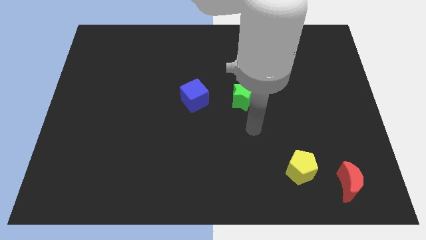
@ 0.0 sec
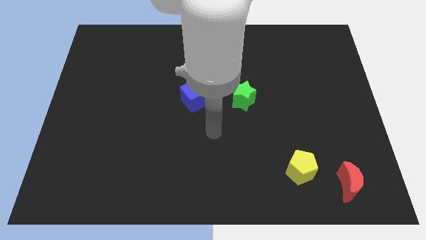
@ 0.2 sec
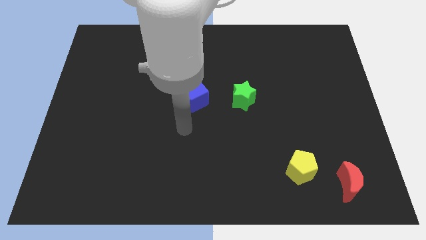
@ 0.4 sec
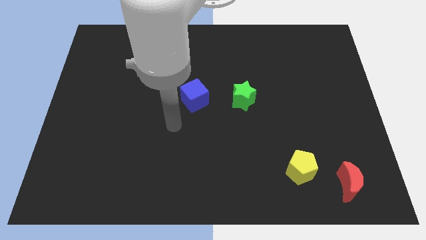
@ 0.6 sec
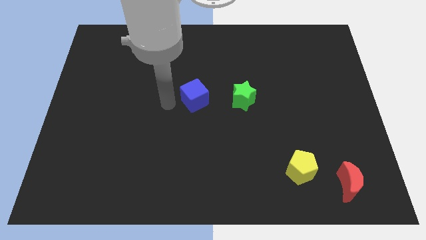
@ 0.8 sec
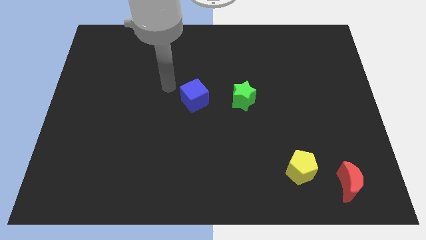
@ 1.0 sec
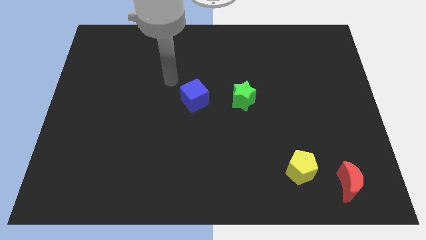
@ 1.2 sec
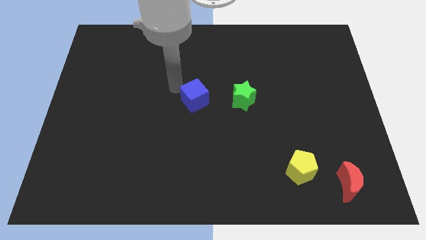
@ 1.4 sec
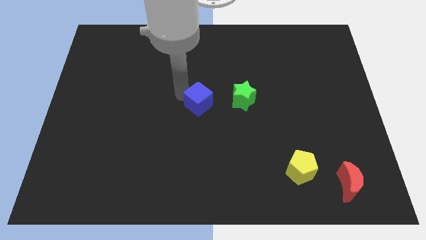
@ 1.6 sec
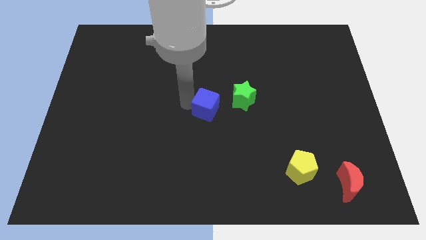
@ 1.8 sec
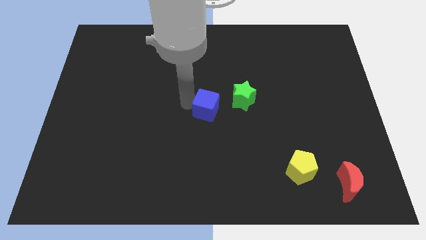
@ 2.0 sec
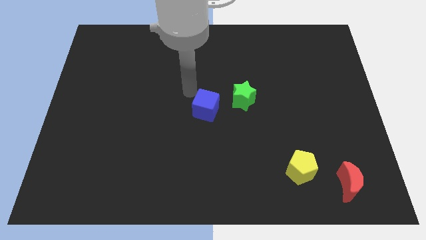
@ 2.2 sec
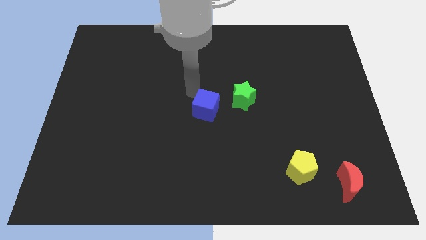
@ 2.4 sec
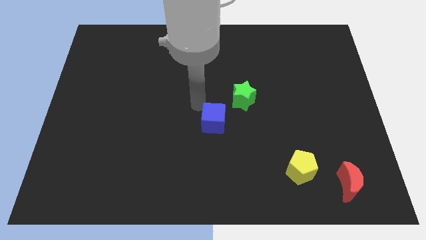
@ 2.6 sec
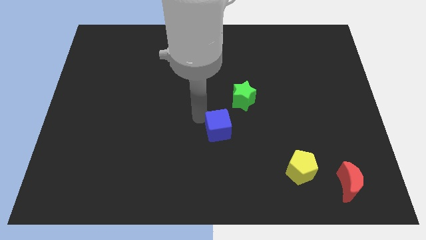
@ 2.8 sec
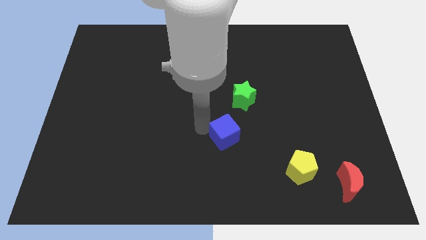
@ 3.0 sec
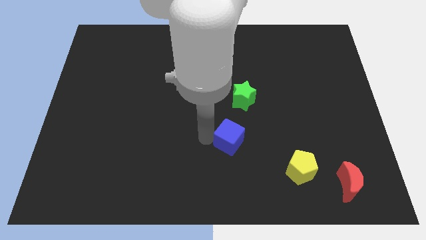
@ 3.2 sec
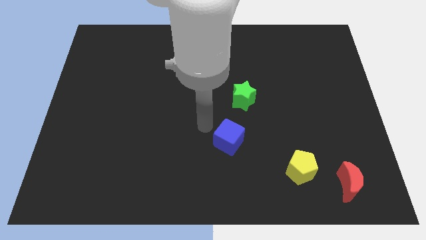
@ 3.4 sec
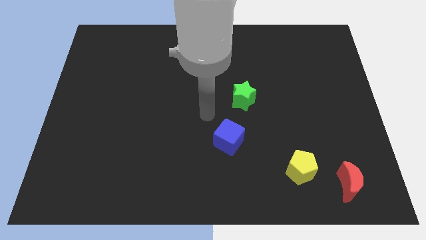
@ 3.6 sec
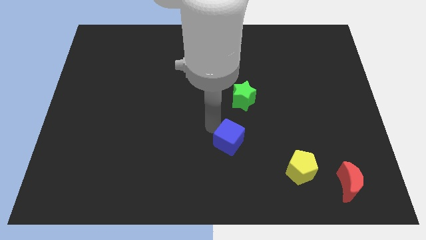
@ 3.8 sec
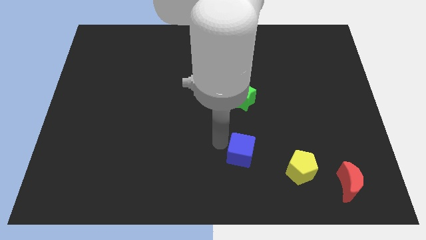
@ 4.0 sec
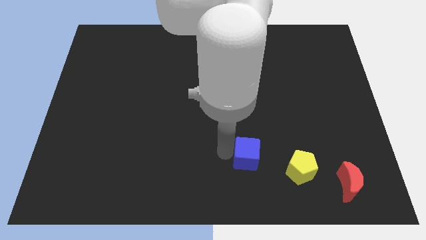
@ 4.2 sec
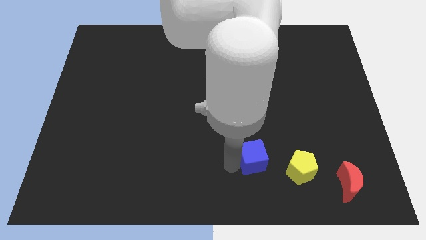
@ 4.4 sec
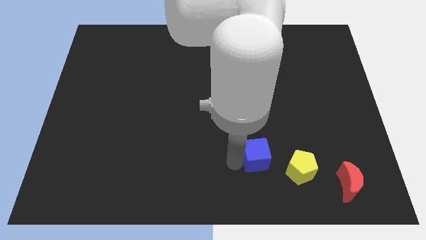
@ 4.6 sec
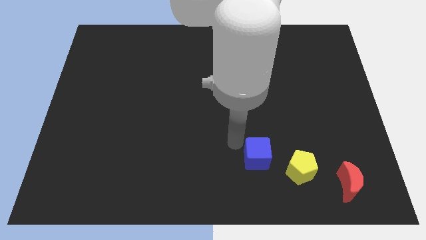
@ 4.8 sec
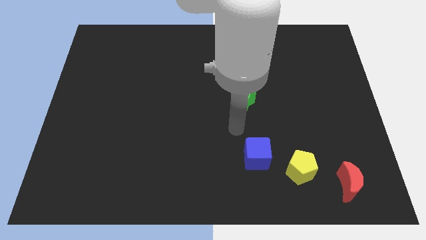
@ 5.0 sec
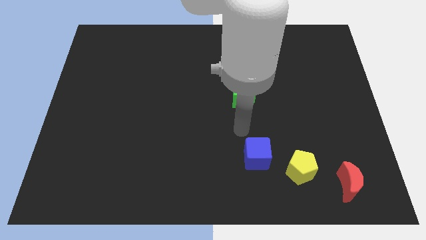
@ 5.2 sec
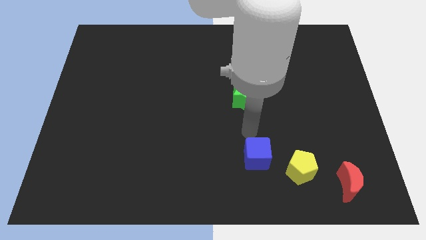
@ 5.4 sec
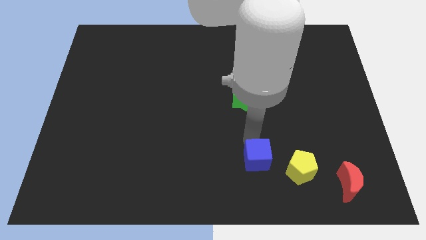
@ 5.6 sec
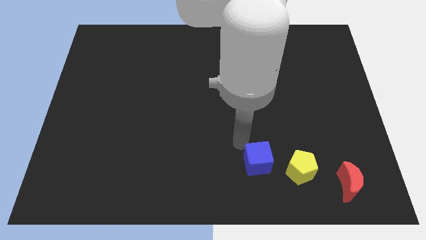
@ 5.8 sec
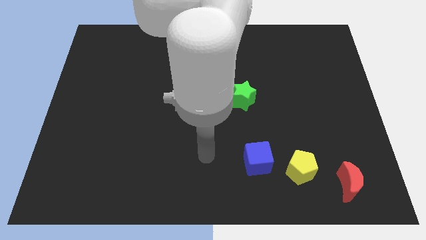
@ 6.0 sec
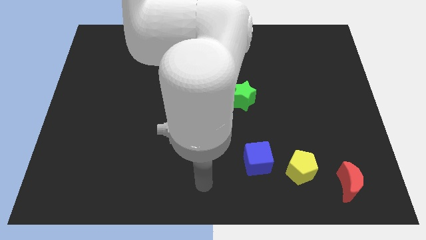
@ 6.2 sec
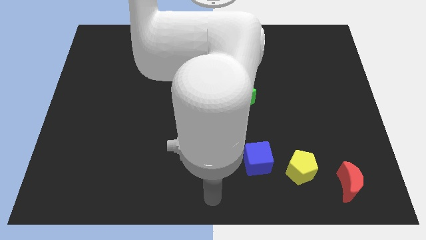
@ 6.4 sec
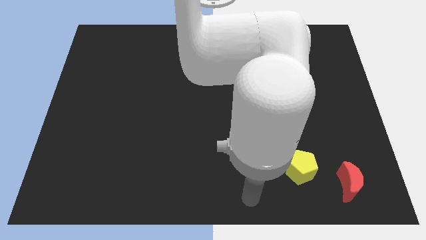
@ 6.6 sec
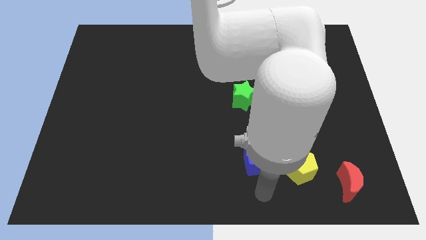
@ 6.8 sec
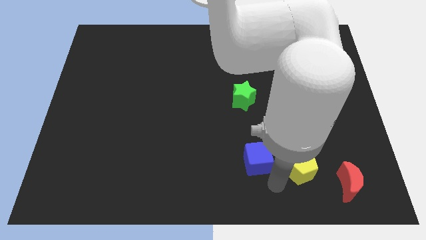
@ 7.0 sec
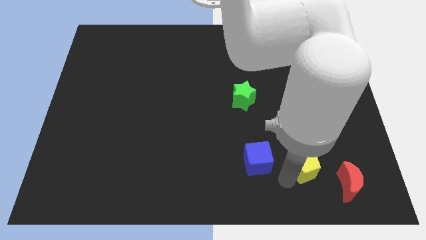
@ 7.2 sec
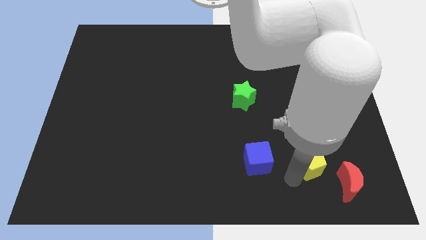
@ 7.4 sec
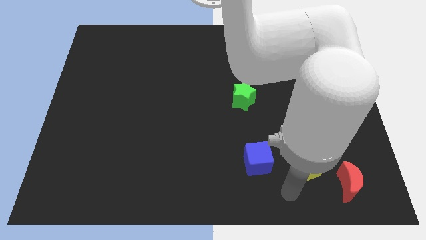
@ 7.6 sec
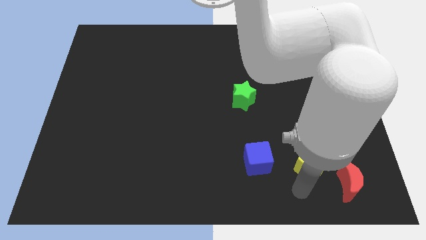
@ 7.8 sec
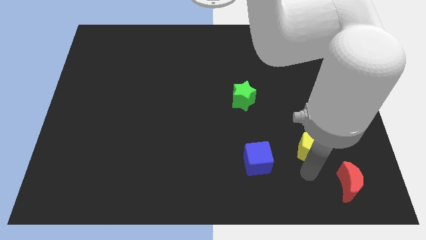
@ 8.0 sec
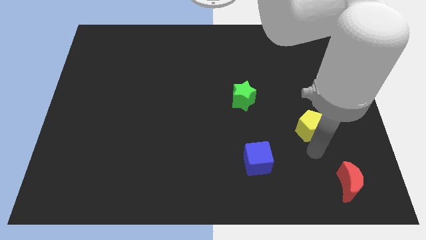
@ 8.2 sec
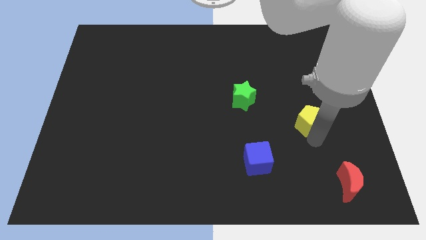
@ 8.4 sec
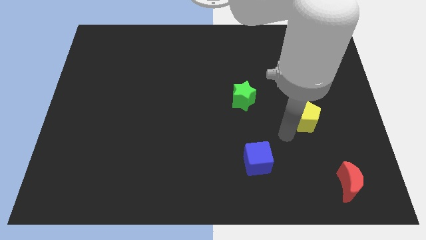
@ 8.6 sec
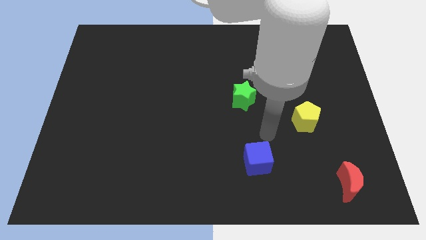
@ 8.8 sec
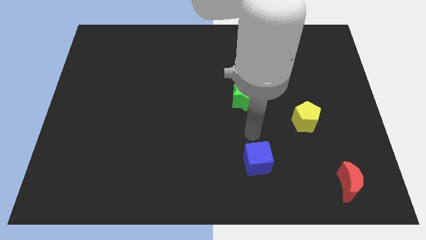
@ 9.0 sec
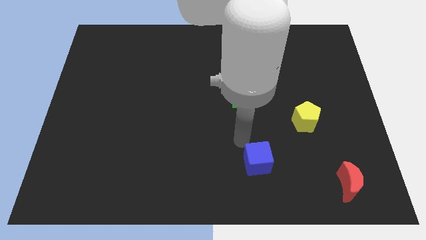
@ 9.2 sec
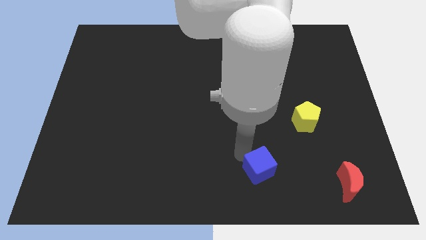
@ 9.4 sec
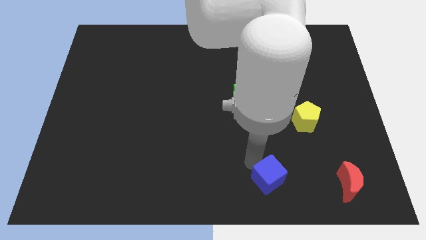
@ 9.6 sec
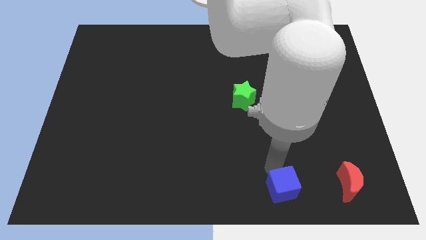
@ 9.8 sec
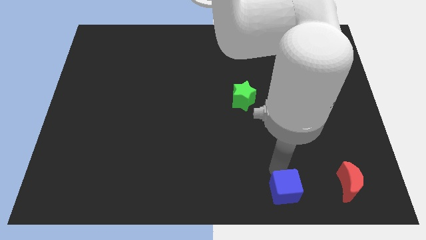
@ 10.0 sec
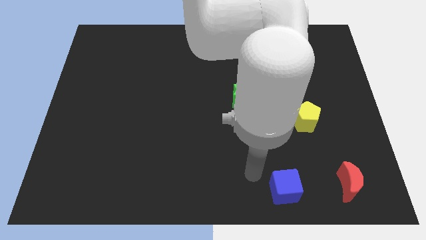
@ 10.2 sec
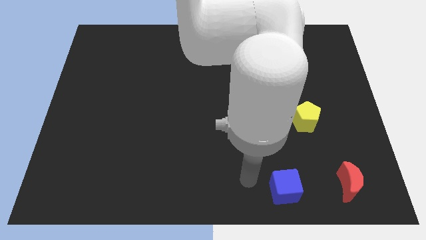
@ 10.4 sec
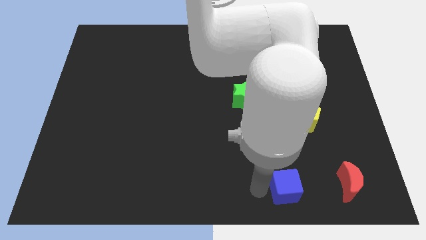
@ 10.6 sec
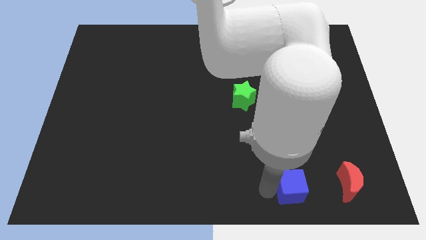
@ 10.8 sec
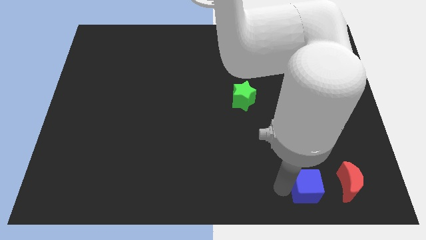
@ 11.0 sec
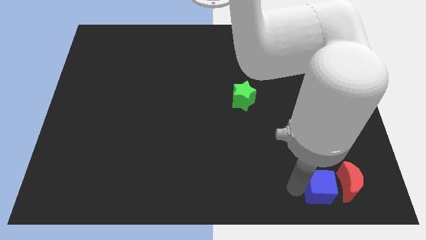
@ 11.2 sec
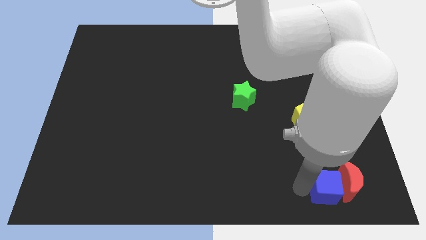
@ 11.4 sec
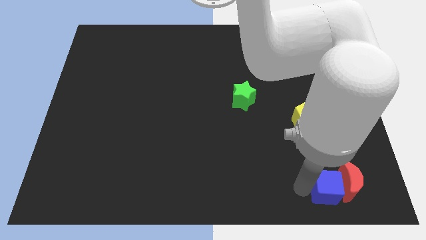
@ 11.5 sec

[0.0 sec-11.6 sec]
move the cube towards the moon

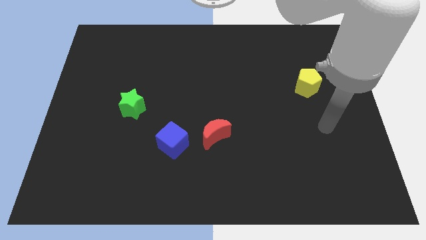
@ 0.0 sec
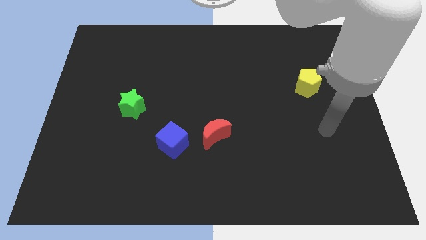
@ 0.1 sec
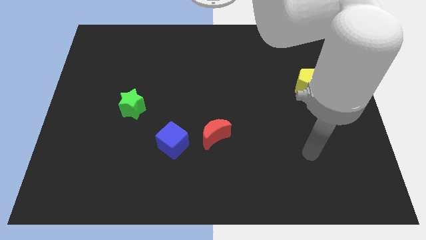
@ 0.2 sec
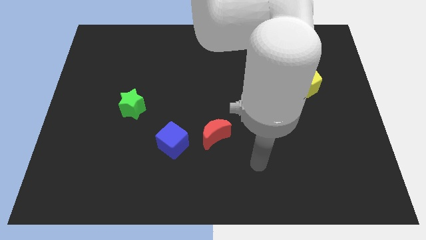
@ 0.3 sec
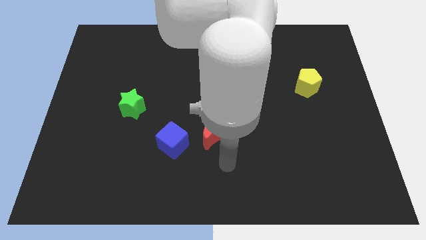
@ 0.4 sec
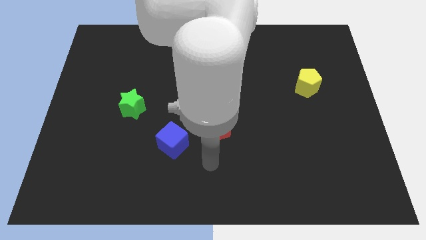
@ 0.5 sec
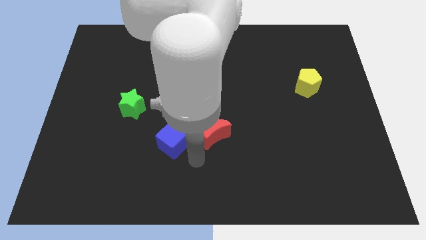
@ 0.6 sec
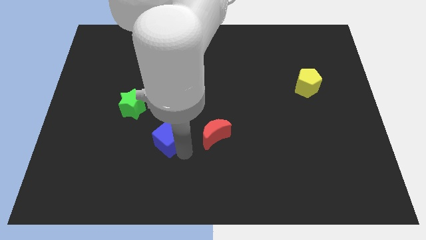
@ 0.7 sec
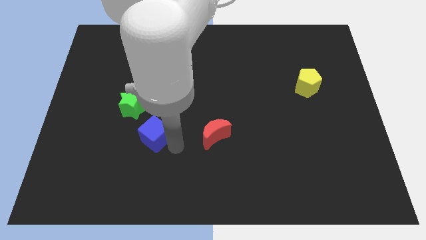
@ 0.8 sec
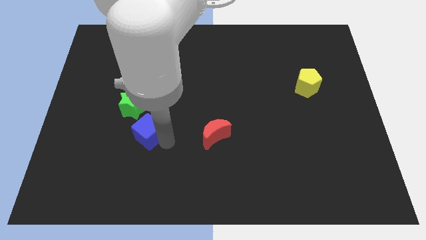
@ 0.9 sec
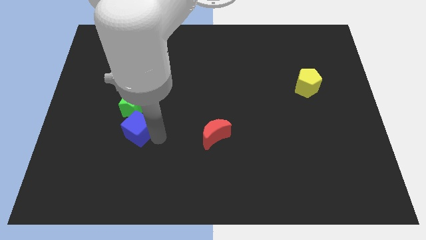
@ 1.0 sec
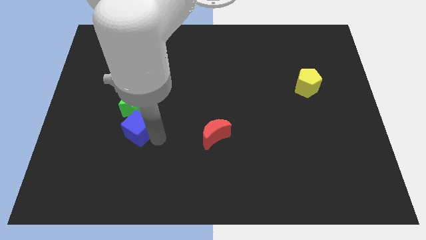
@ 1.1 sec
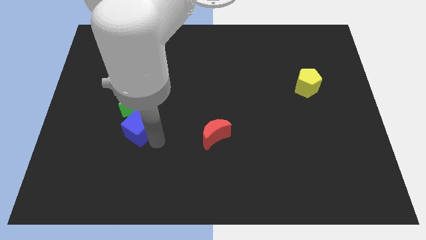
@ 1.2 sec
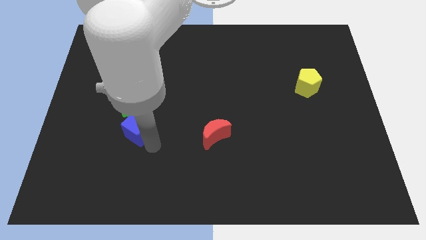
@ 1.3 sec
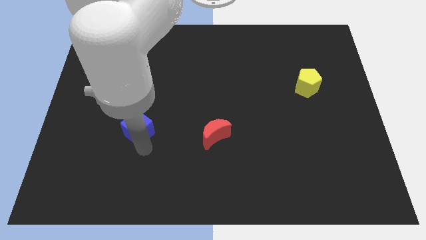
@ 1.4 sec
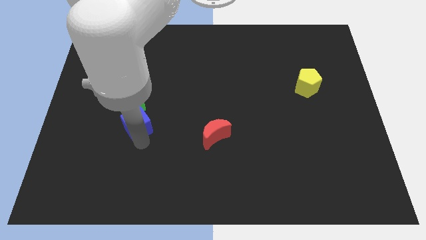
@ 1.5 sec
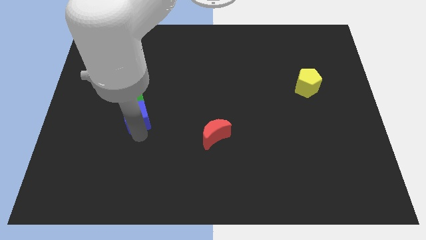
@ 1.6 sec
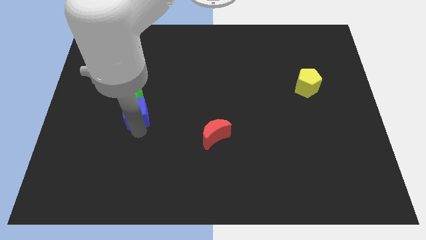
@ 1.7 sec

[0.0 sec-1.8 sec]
slide the blue cube next to the green star

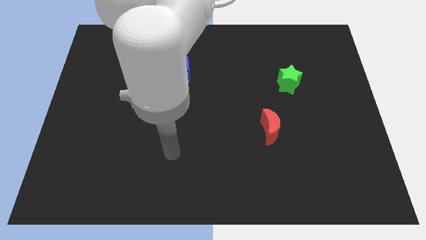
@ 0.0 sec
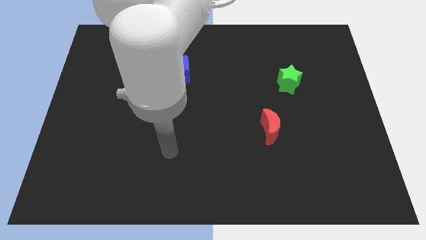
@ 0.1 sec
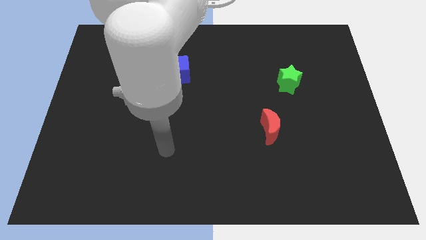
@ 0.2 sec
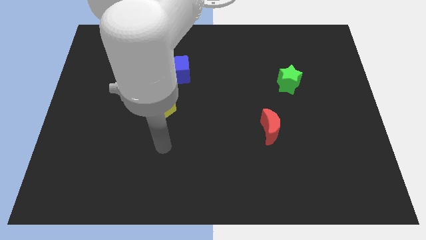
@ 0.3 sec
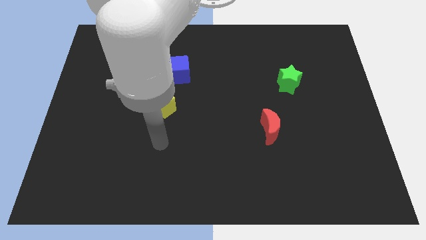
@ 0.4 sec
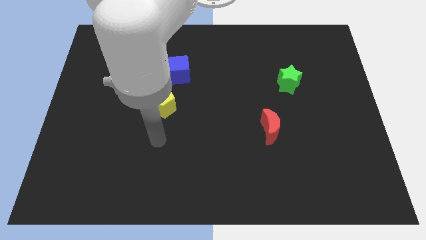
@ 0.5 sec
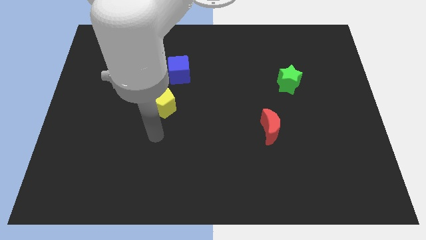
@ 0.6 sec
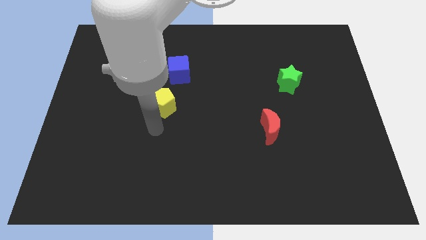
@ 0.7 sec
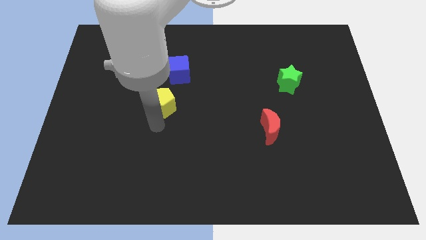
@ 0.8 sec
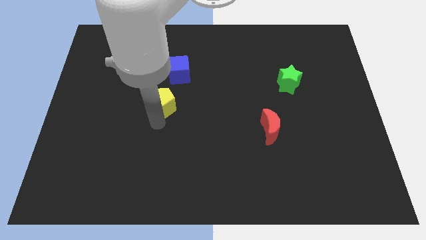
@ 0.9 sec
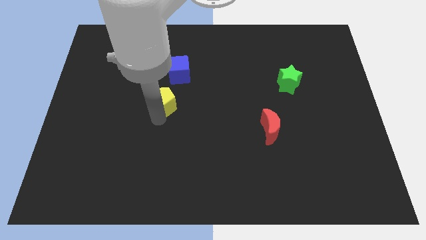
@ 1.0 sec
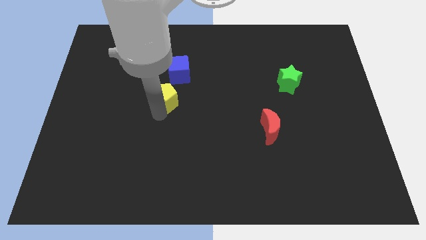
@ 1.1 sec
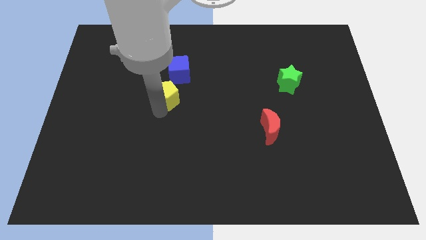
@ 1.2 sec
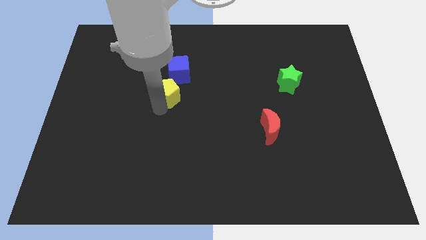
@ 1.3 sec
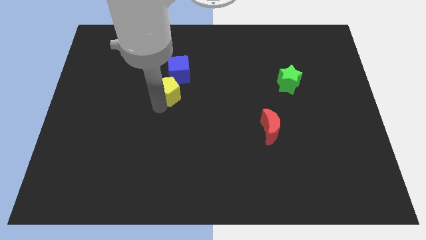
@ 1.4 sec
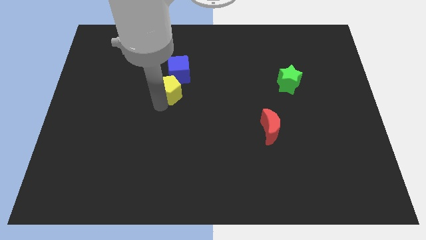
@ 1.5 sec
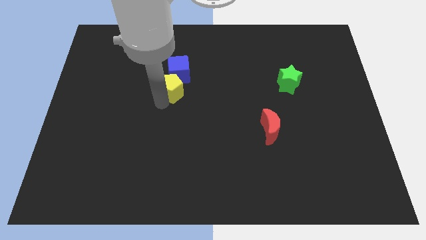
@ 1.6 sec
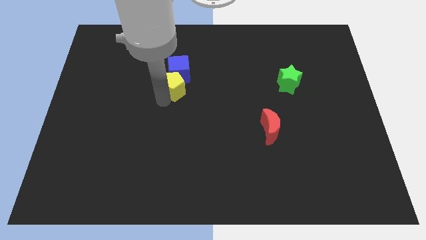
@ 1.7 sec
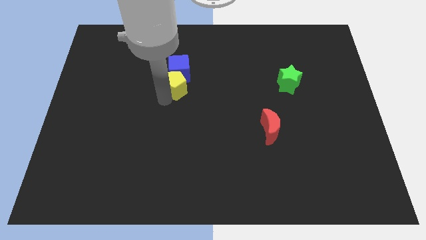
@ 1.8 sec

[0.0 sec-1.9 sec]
slide the yellow pentagon next to the blue cube
